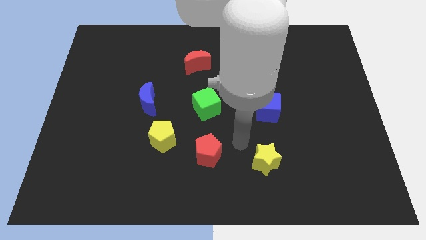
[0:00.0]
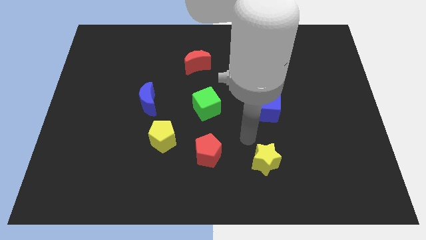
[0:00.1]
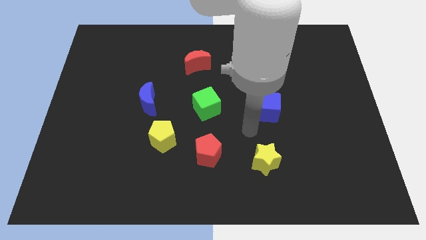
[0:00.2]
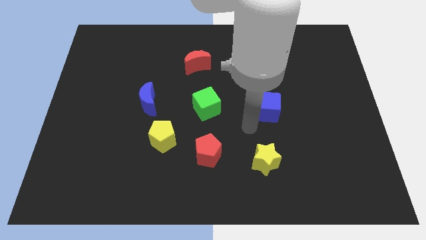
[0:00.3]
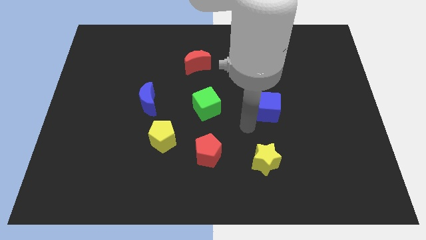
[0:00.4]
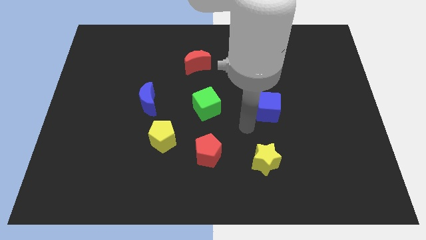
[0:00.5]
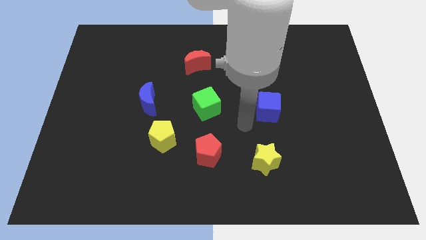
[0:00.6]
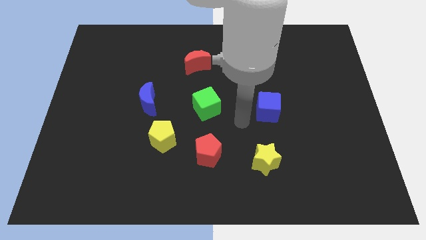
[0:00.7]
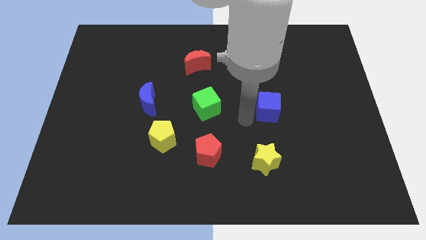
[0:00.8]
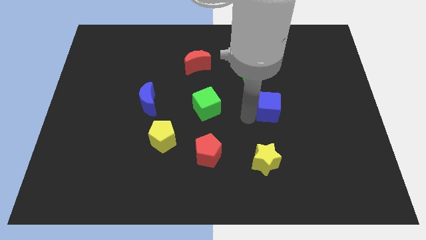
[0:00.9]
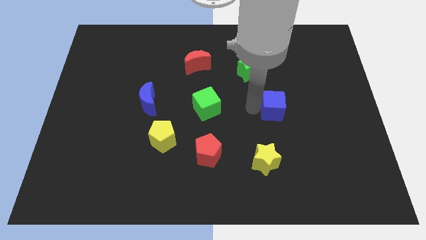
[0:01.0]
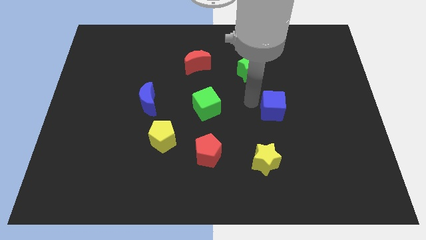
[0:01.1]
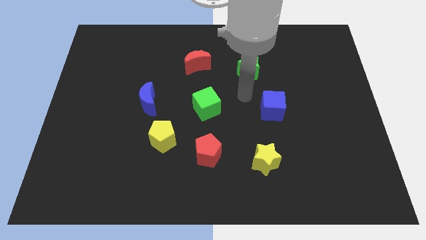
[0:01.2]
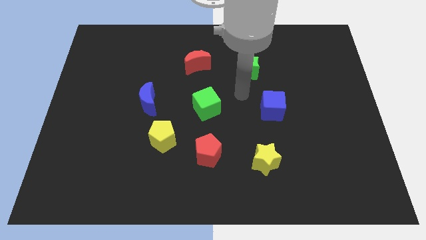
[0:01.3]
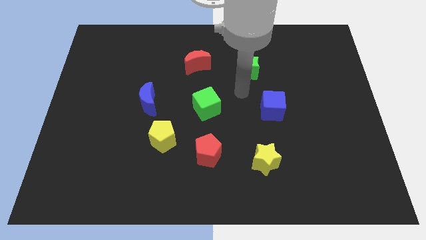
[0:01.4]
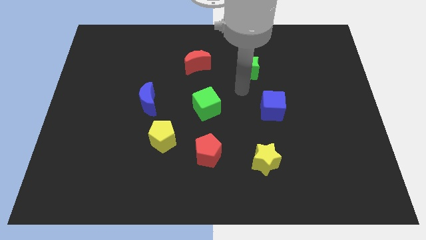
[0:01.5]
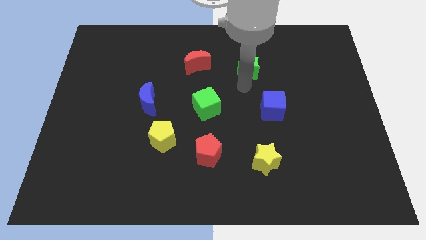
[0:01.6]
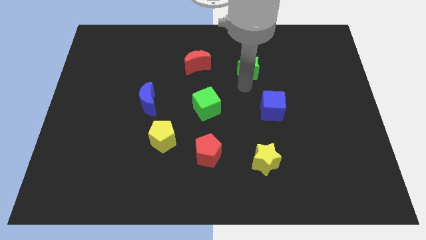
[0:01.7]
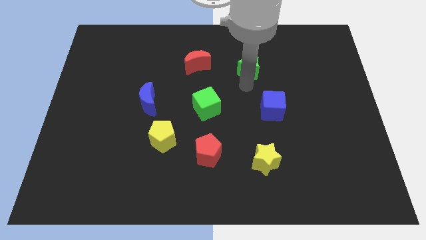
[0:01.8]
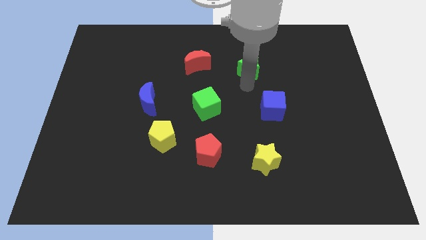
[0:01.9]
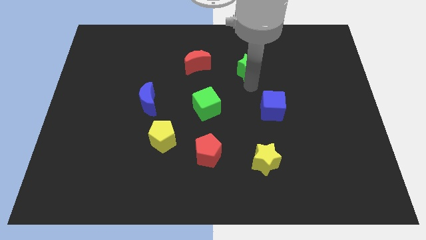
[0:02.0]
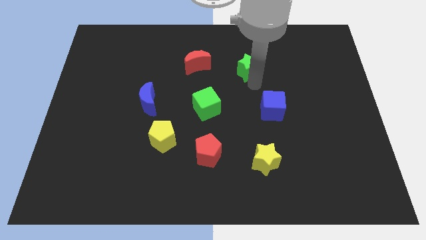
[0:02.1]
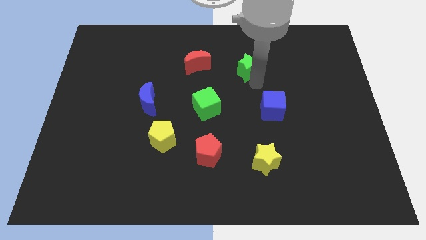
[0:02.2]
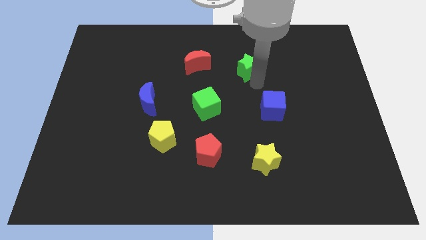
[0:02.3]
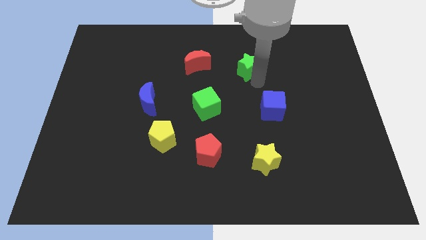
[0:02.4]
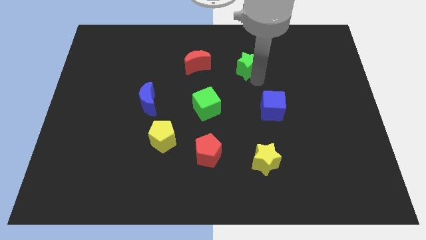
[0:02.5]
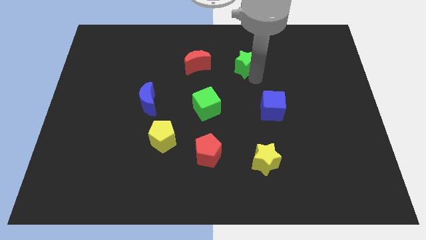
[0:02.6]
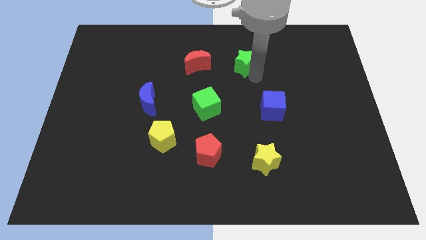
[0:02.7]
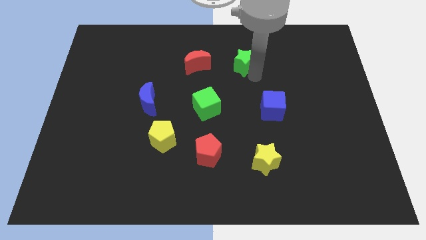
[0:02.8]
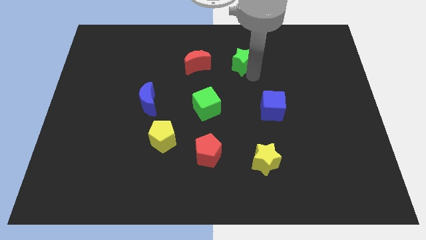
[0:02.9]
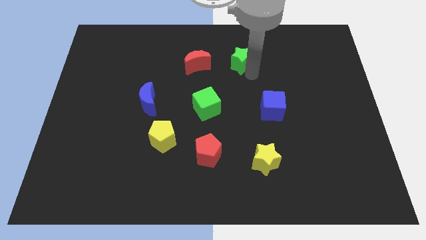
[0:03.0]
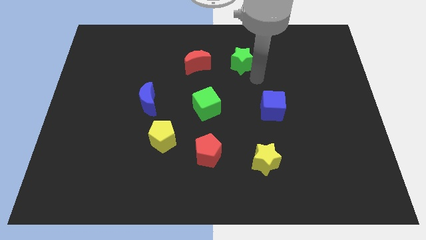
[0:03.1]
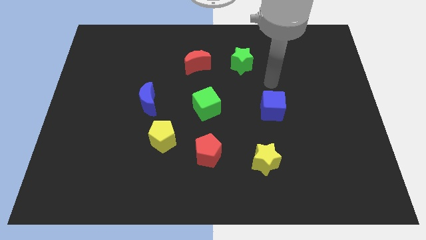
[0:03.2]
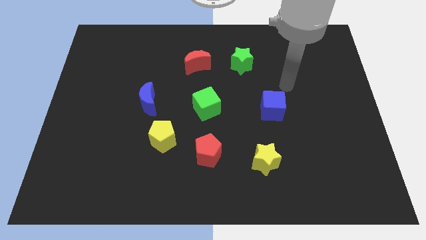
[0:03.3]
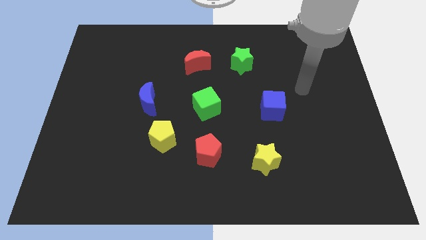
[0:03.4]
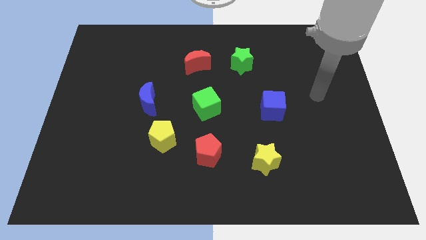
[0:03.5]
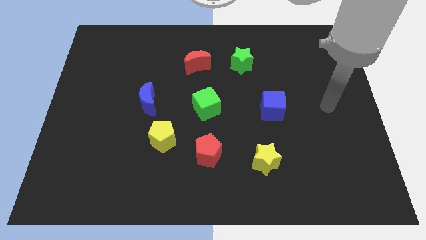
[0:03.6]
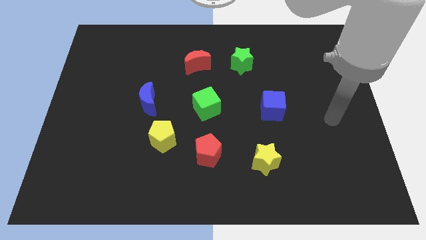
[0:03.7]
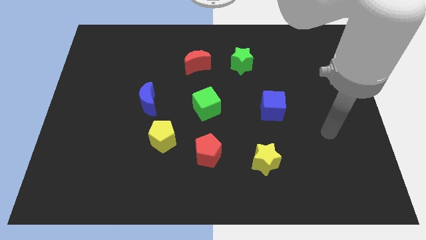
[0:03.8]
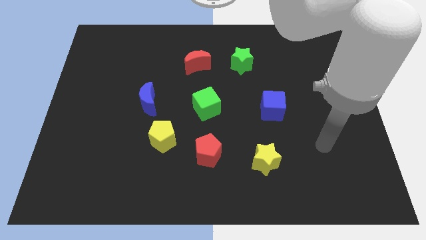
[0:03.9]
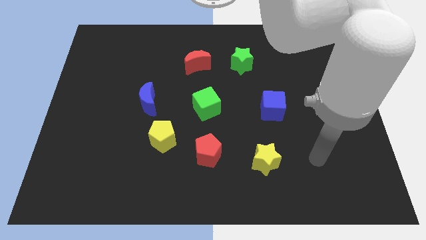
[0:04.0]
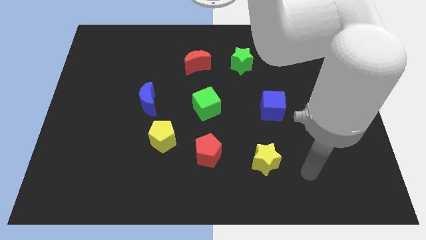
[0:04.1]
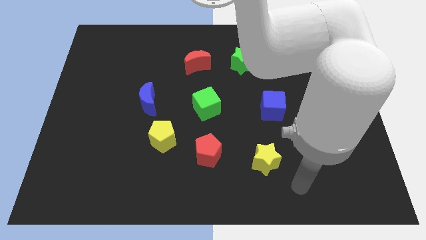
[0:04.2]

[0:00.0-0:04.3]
push the green star slightly to the right side of the red crescent

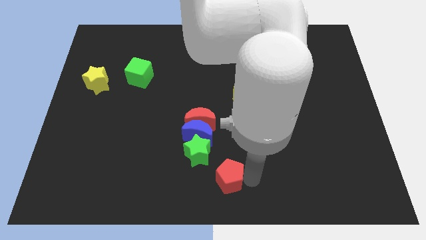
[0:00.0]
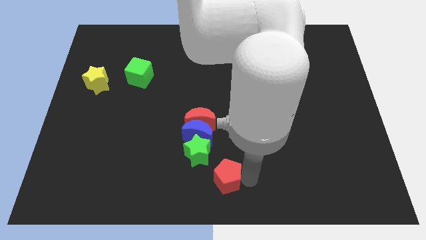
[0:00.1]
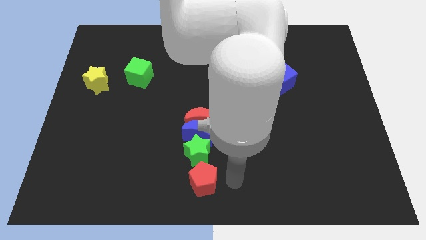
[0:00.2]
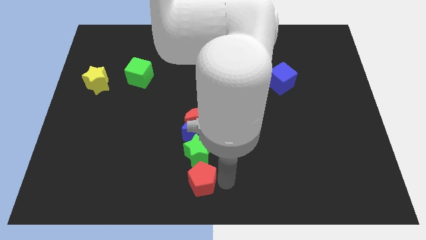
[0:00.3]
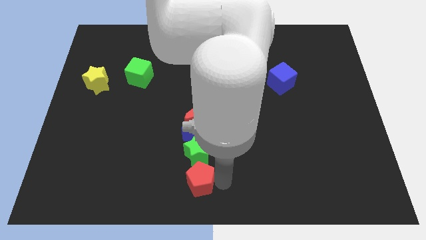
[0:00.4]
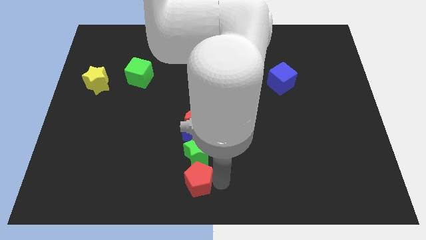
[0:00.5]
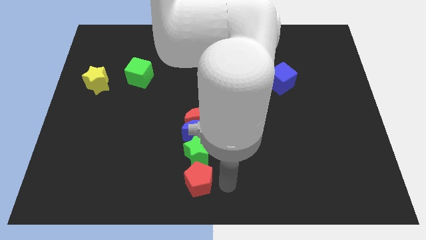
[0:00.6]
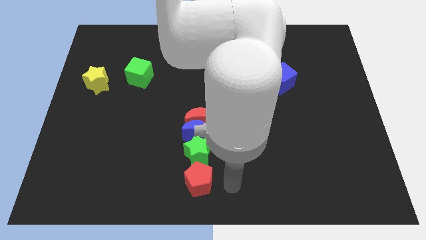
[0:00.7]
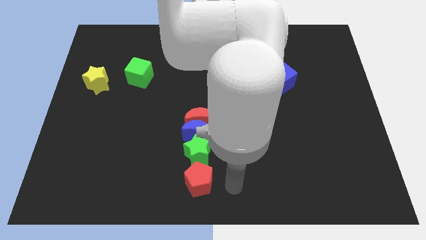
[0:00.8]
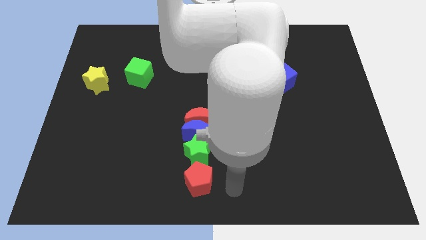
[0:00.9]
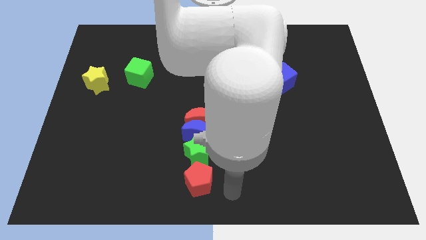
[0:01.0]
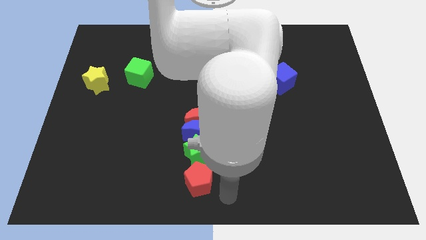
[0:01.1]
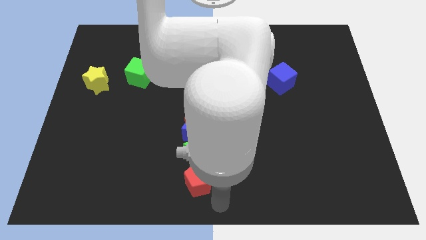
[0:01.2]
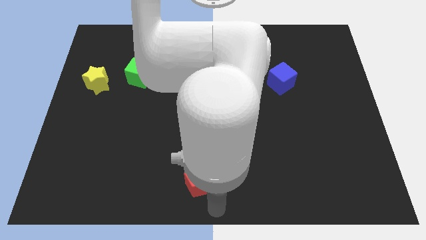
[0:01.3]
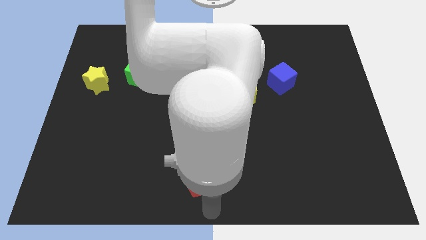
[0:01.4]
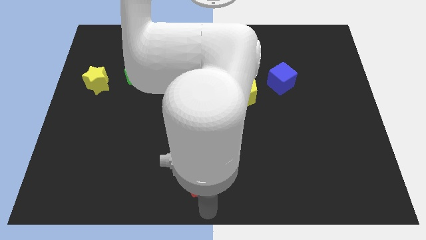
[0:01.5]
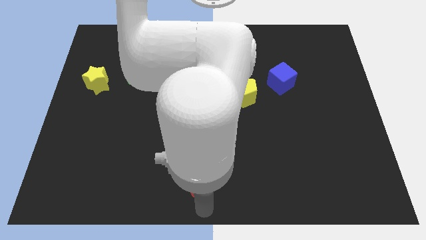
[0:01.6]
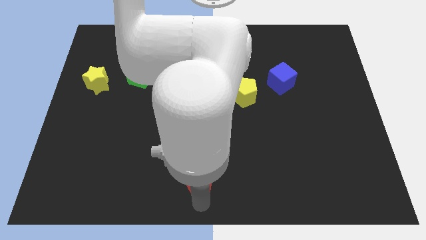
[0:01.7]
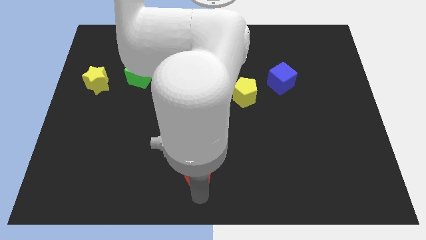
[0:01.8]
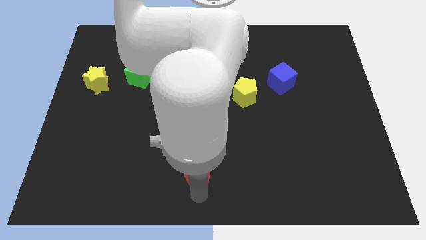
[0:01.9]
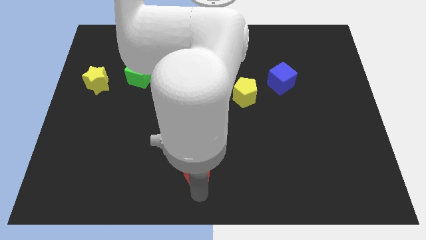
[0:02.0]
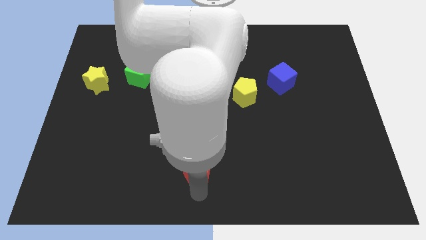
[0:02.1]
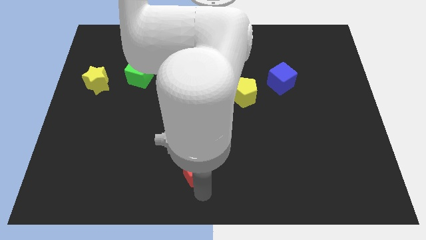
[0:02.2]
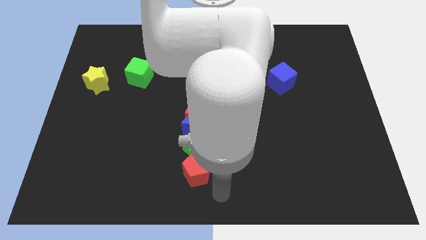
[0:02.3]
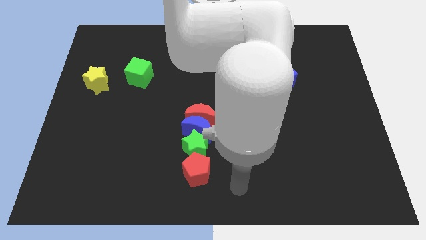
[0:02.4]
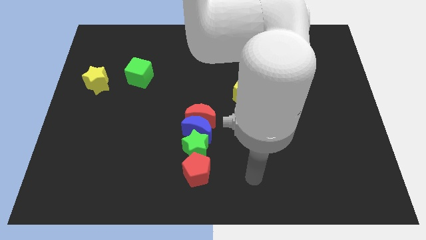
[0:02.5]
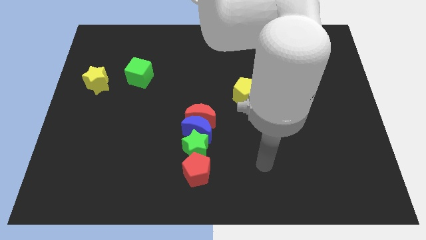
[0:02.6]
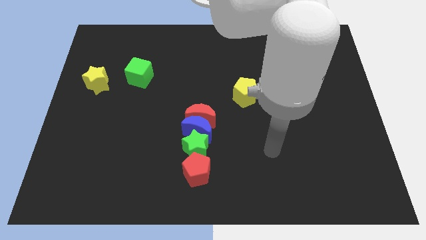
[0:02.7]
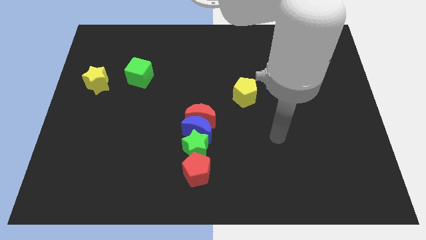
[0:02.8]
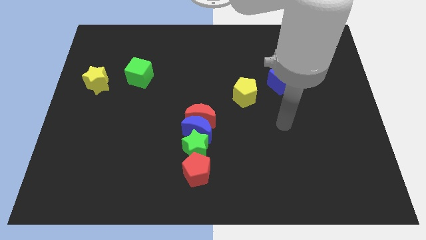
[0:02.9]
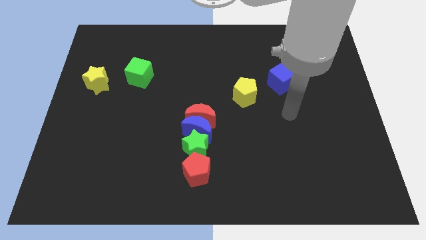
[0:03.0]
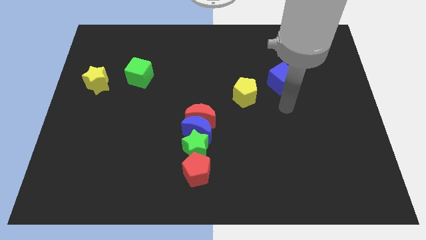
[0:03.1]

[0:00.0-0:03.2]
place the red pentagon vertically below the green star

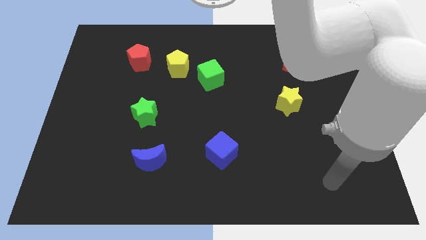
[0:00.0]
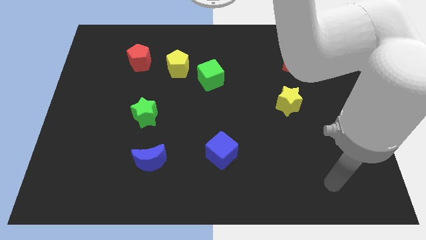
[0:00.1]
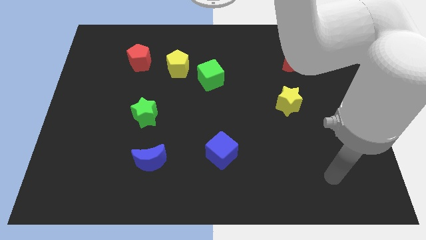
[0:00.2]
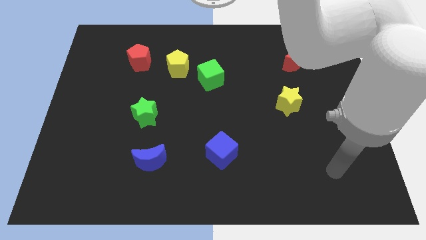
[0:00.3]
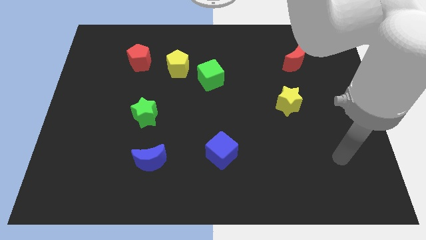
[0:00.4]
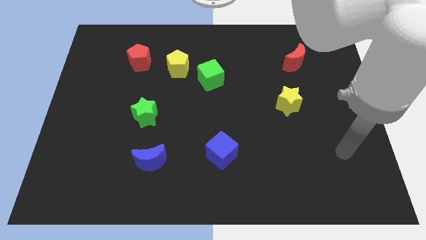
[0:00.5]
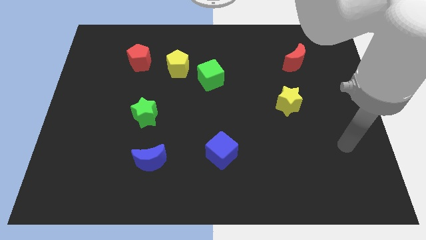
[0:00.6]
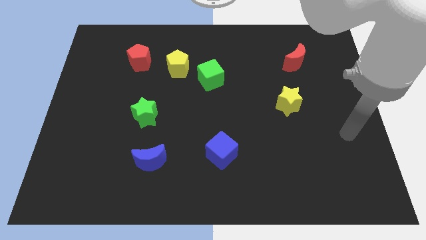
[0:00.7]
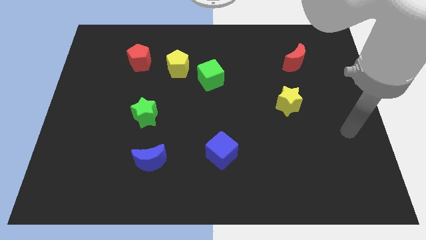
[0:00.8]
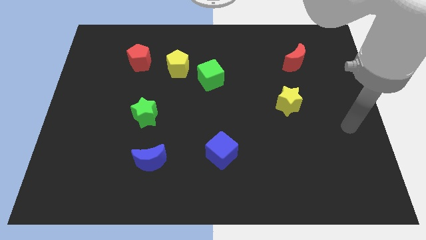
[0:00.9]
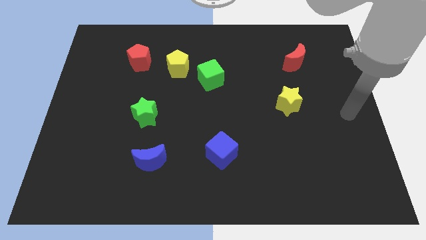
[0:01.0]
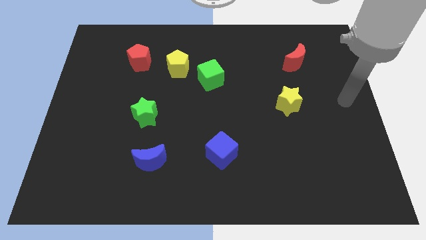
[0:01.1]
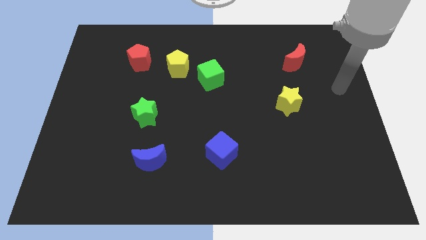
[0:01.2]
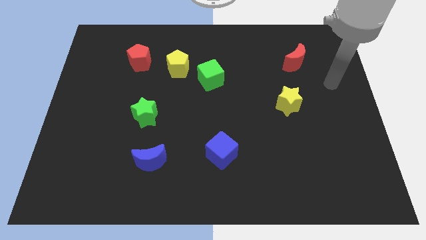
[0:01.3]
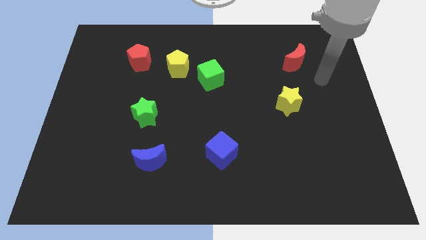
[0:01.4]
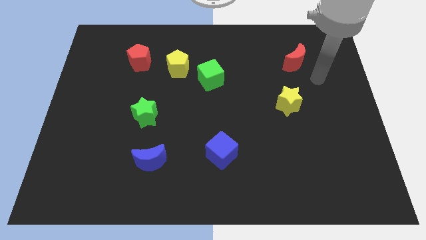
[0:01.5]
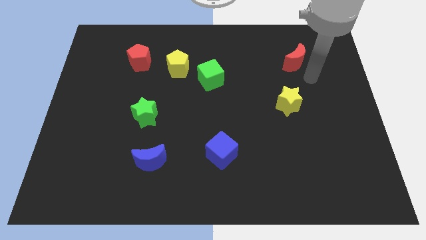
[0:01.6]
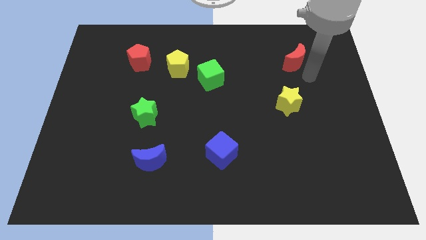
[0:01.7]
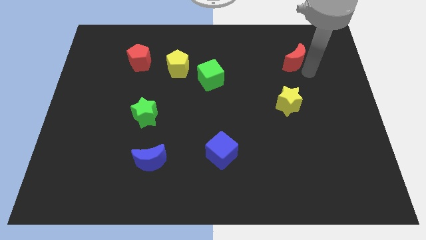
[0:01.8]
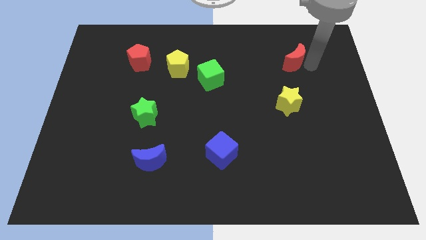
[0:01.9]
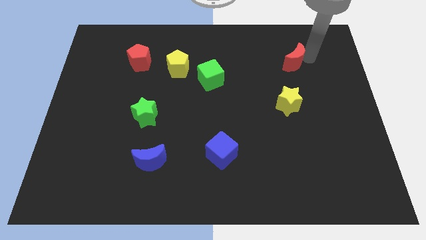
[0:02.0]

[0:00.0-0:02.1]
move the arm towards the red crescent
